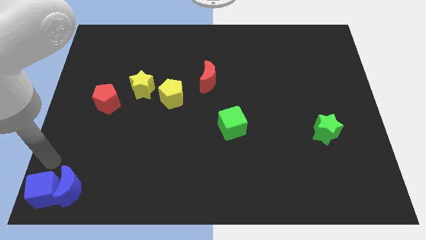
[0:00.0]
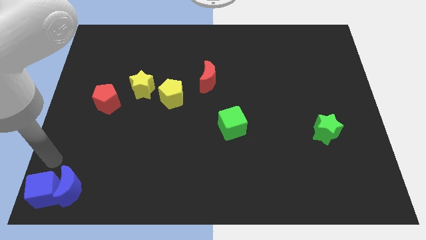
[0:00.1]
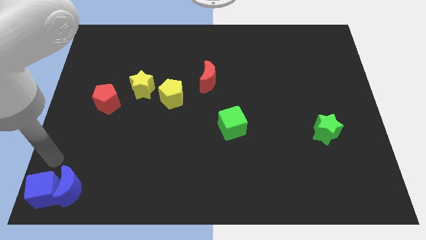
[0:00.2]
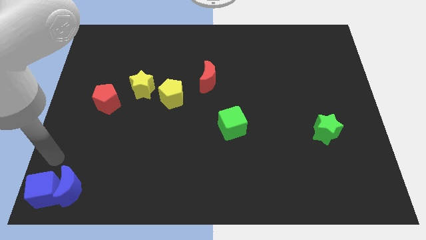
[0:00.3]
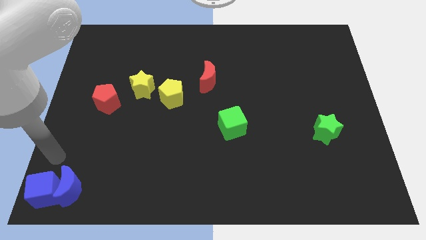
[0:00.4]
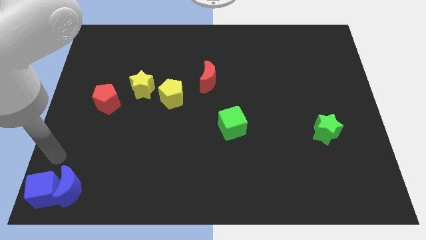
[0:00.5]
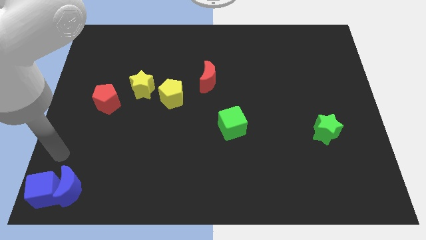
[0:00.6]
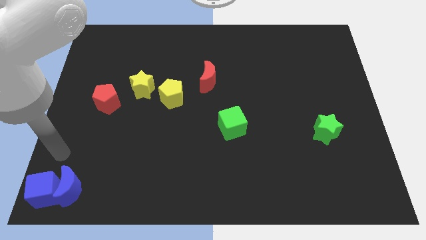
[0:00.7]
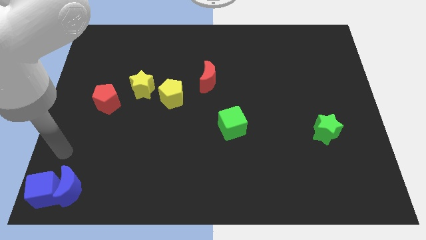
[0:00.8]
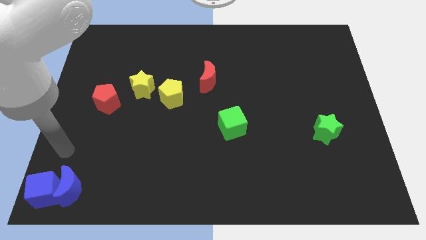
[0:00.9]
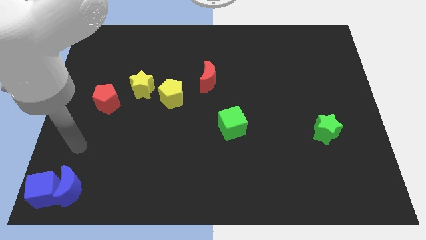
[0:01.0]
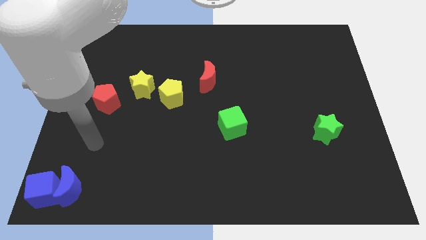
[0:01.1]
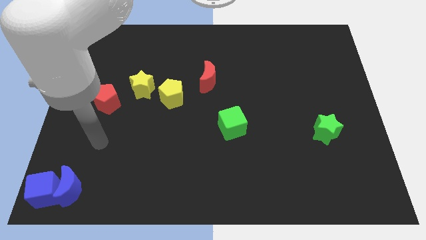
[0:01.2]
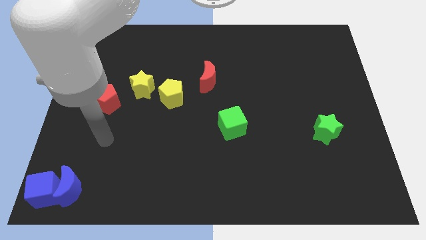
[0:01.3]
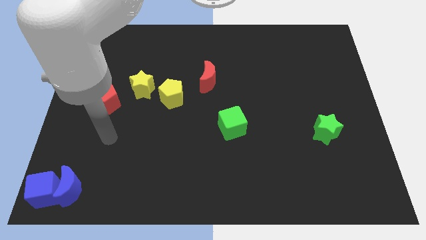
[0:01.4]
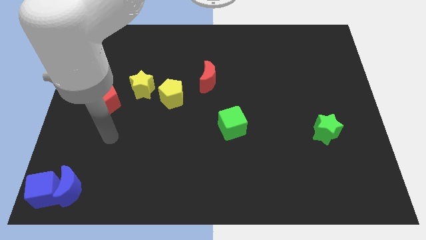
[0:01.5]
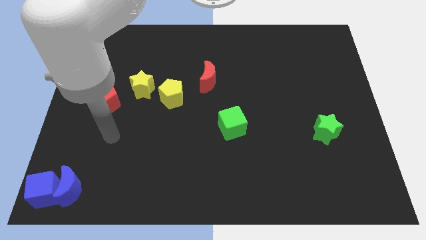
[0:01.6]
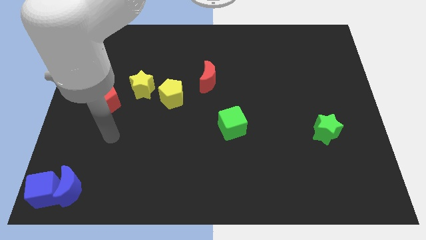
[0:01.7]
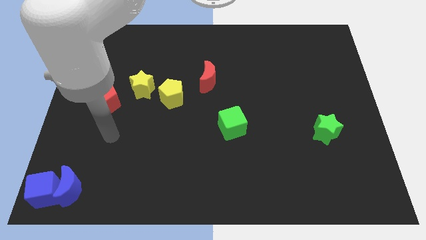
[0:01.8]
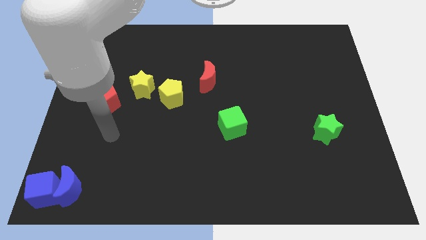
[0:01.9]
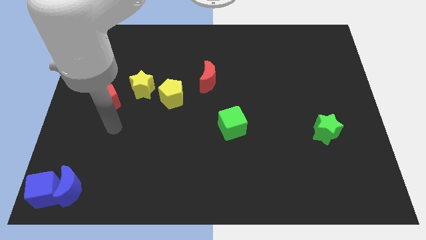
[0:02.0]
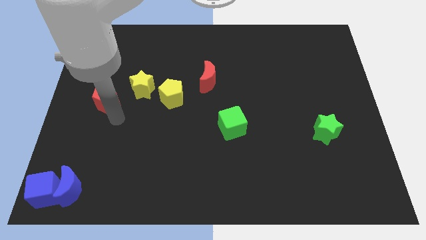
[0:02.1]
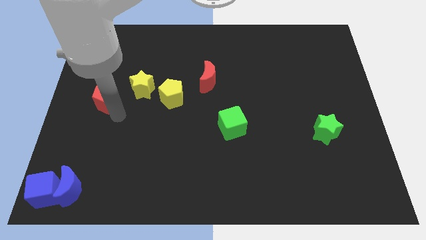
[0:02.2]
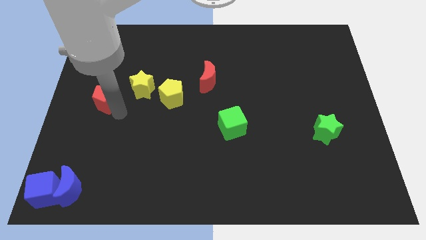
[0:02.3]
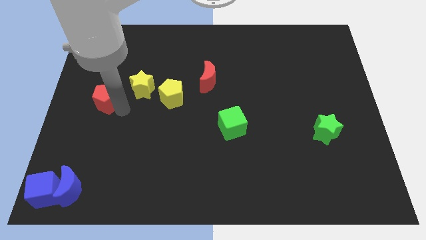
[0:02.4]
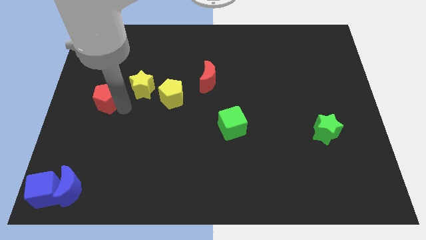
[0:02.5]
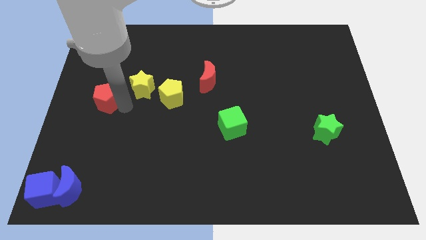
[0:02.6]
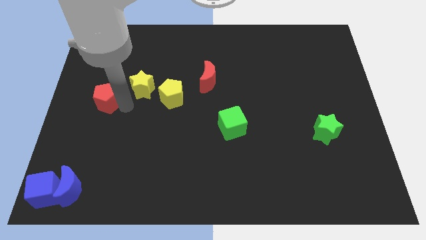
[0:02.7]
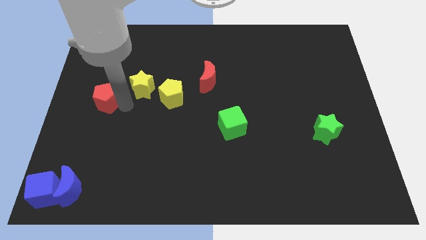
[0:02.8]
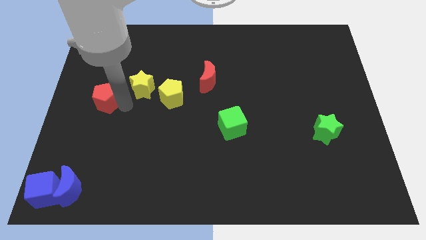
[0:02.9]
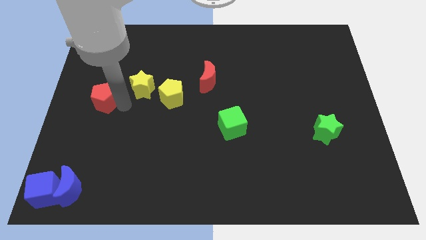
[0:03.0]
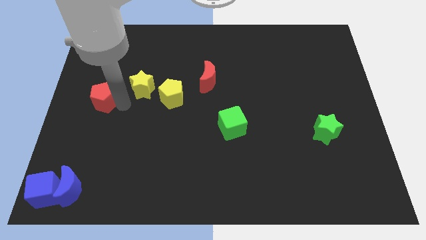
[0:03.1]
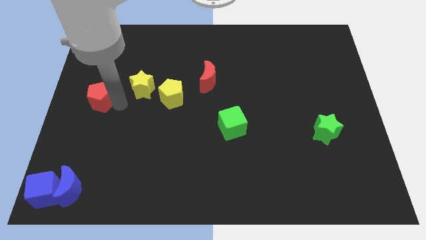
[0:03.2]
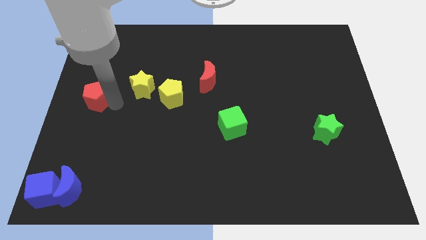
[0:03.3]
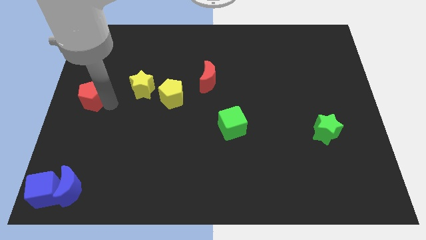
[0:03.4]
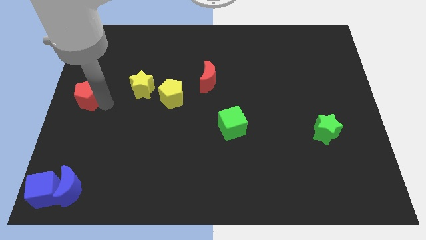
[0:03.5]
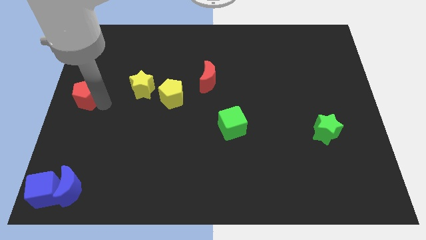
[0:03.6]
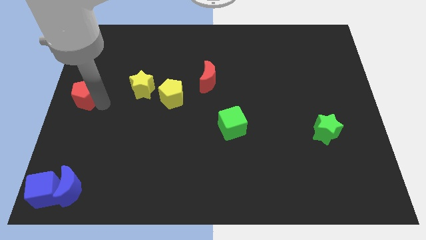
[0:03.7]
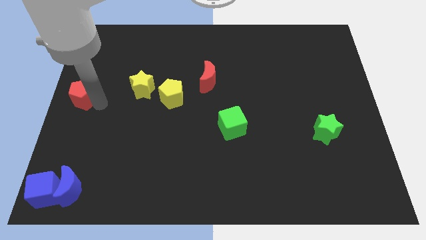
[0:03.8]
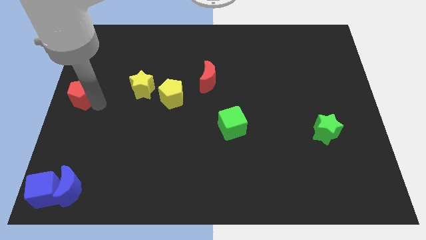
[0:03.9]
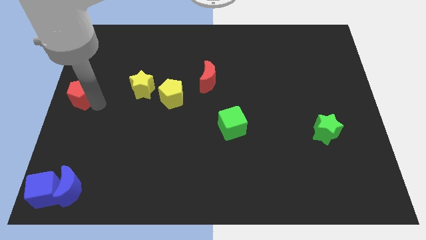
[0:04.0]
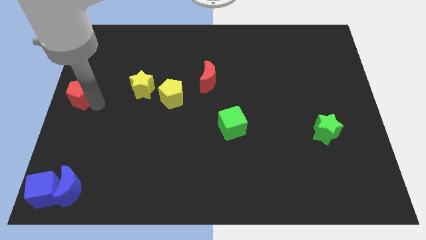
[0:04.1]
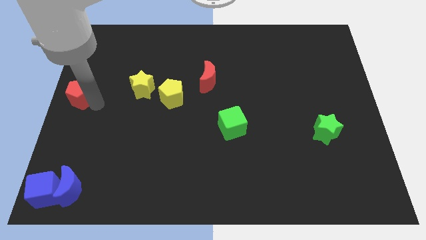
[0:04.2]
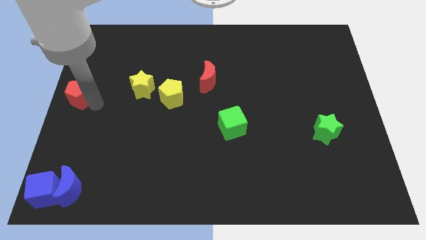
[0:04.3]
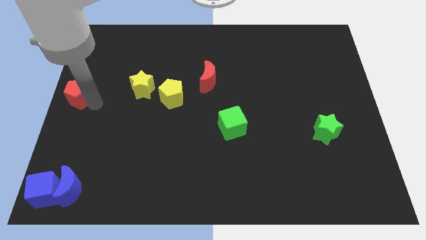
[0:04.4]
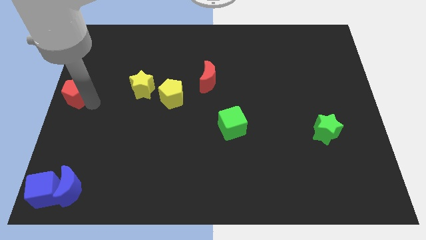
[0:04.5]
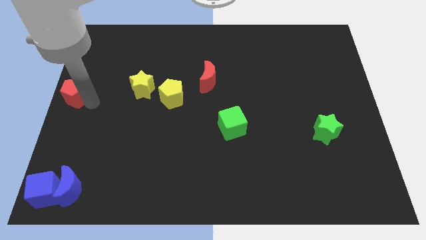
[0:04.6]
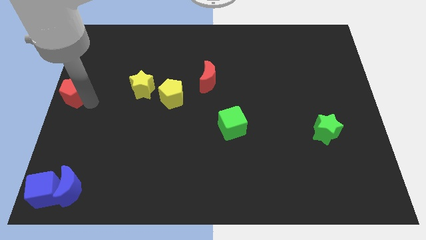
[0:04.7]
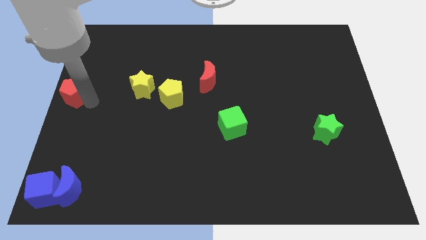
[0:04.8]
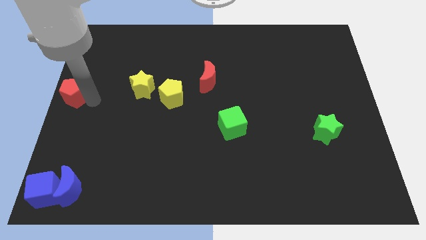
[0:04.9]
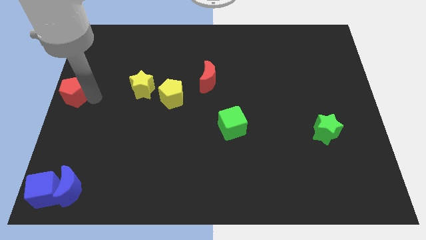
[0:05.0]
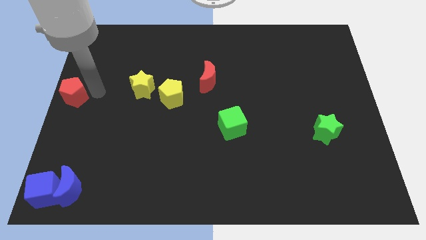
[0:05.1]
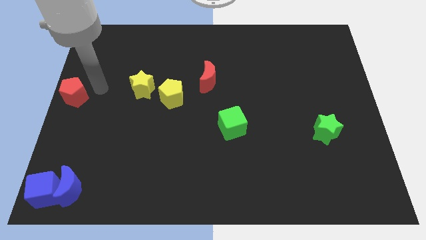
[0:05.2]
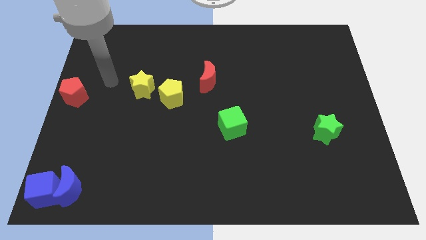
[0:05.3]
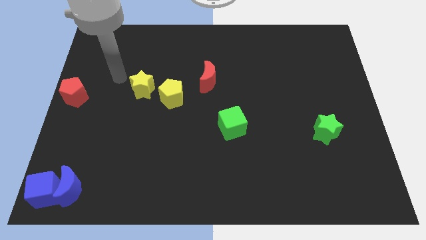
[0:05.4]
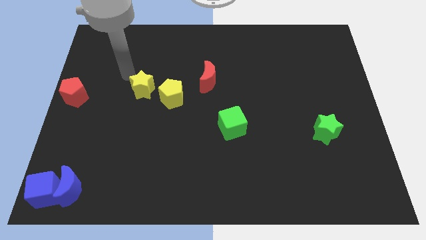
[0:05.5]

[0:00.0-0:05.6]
move the red pentagon to the middle left of the board

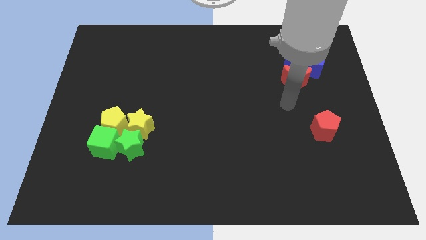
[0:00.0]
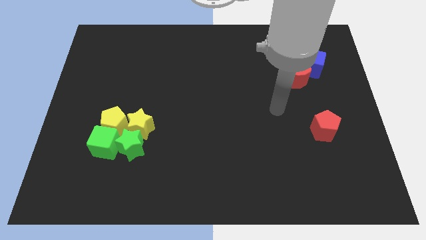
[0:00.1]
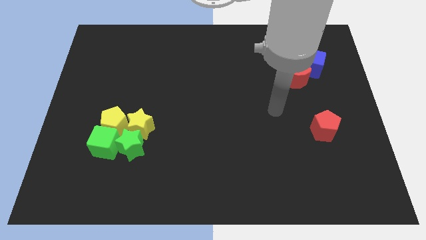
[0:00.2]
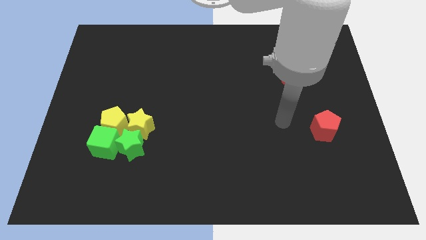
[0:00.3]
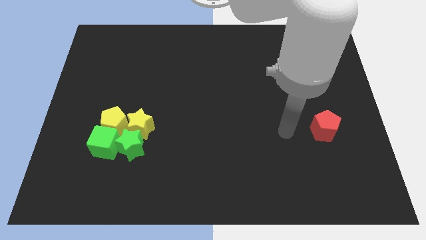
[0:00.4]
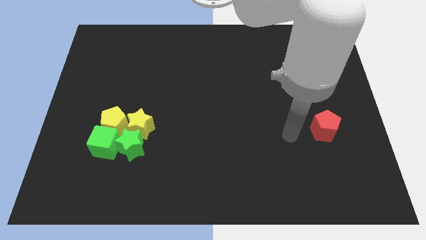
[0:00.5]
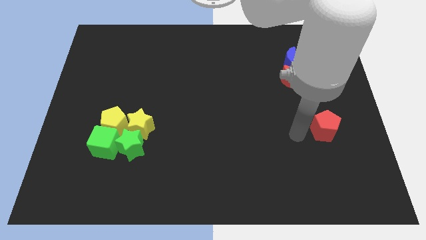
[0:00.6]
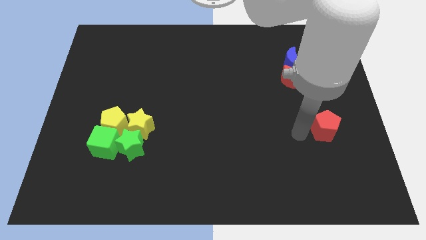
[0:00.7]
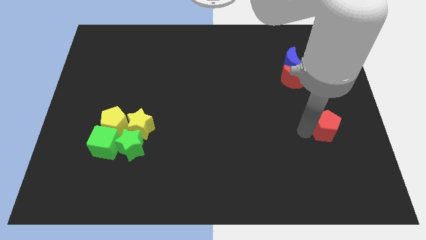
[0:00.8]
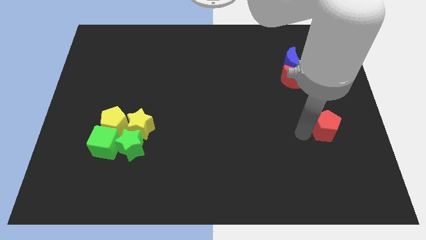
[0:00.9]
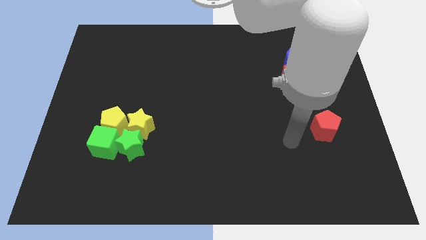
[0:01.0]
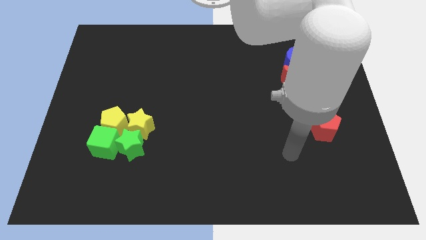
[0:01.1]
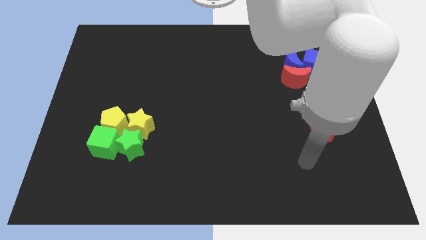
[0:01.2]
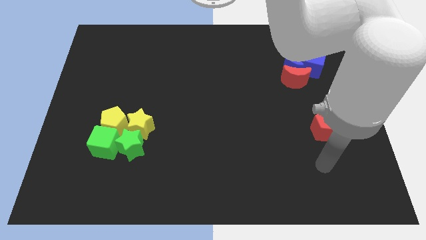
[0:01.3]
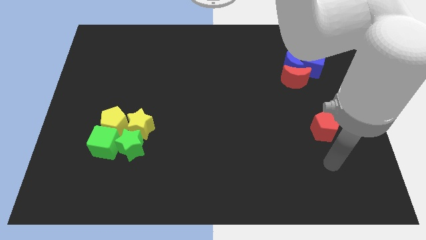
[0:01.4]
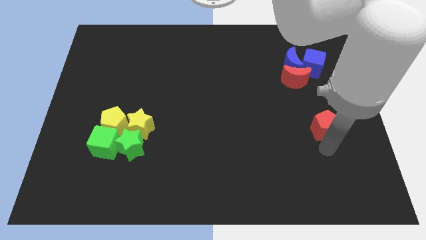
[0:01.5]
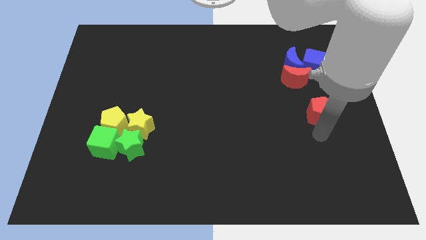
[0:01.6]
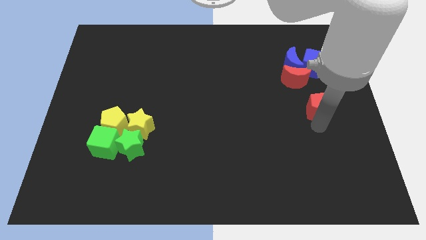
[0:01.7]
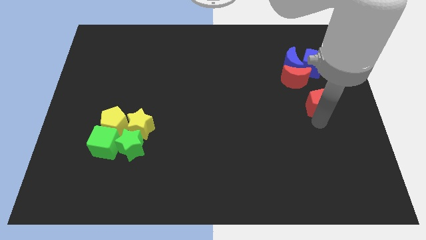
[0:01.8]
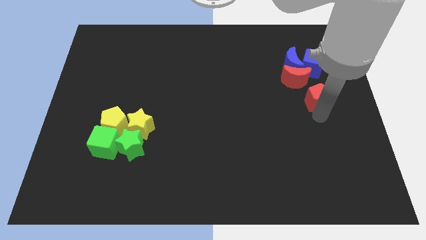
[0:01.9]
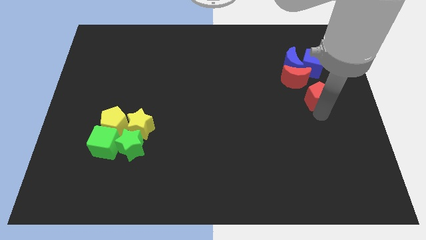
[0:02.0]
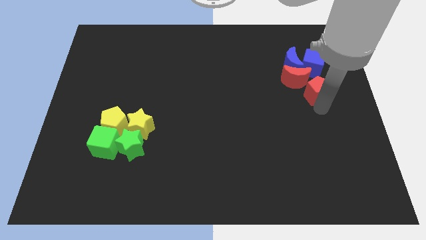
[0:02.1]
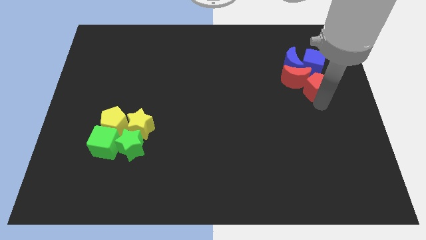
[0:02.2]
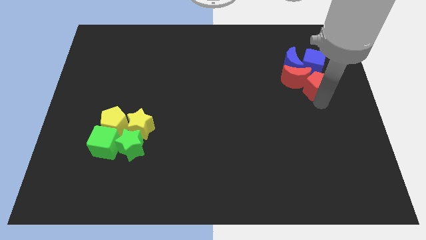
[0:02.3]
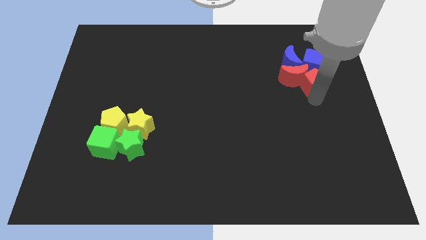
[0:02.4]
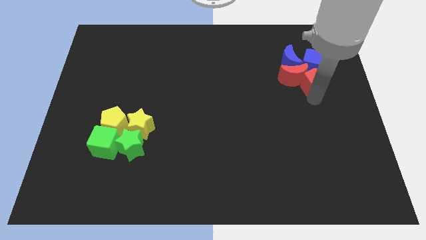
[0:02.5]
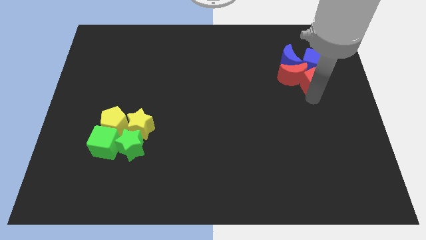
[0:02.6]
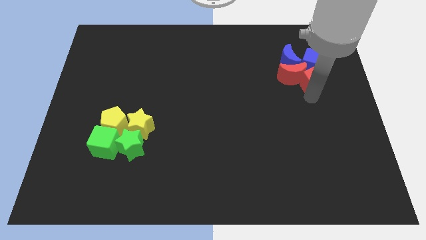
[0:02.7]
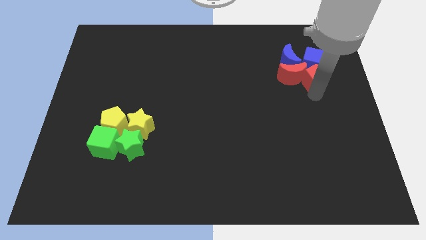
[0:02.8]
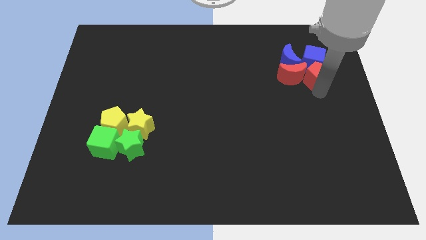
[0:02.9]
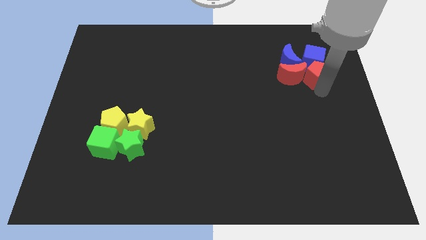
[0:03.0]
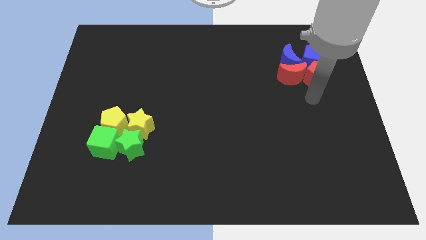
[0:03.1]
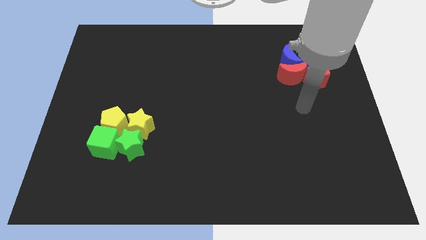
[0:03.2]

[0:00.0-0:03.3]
move the red pentagon to the right of the red crescent
